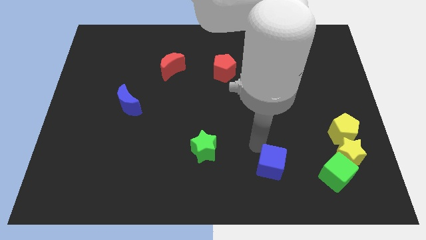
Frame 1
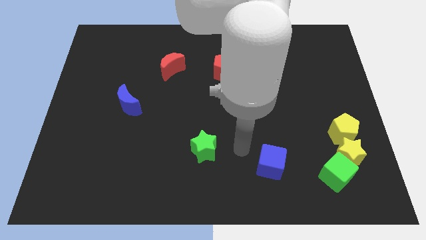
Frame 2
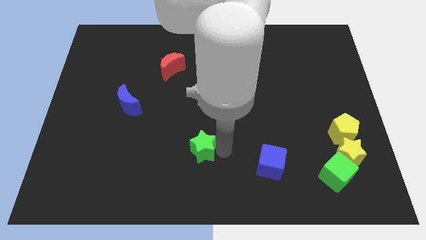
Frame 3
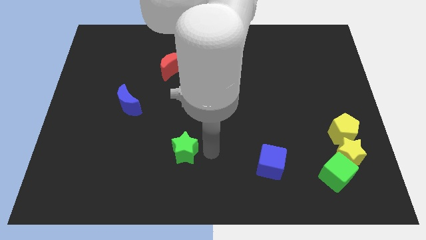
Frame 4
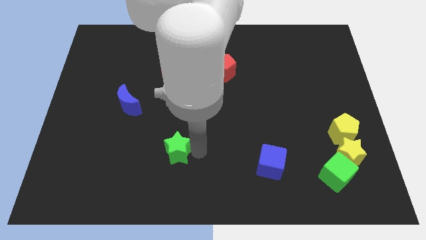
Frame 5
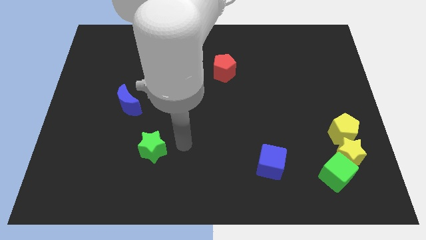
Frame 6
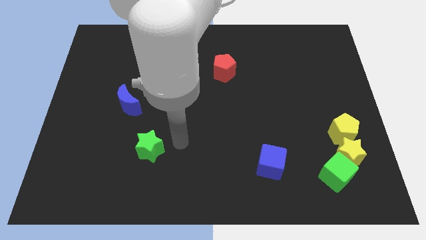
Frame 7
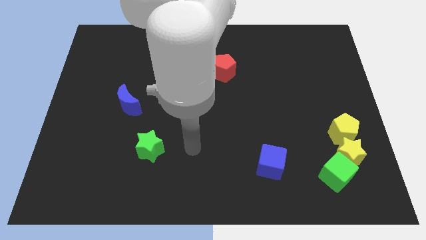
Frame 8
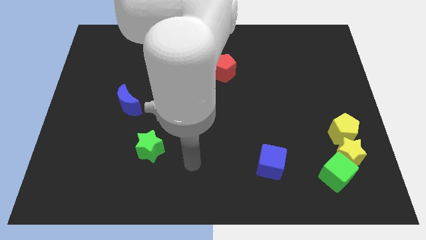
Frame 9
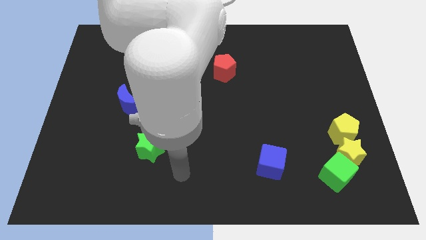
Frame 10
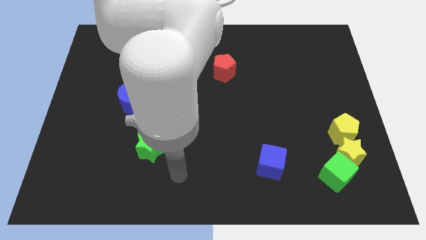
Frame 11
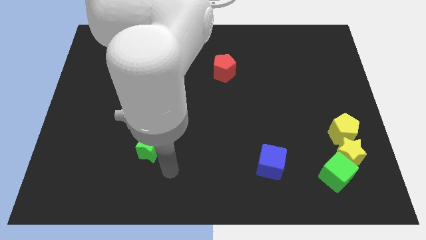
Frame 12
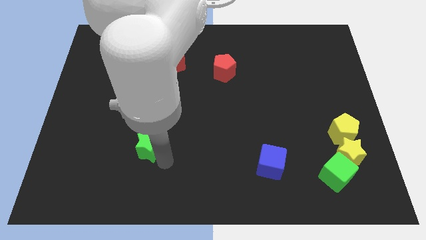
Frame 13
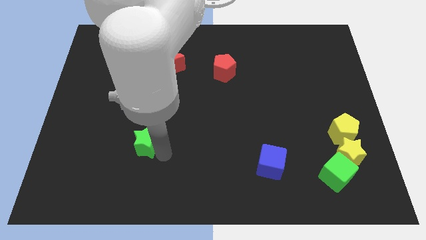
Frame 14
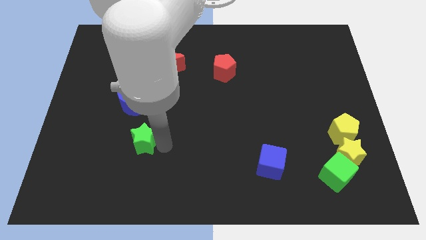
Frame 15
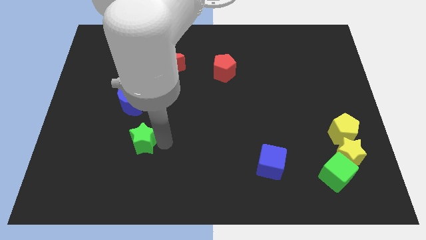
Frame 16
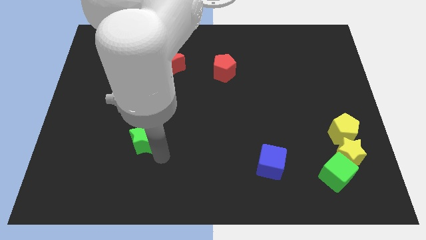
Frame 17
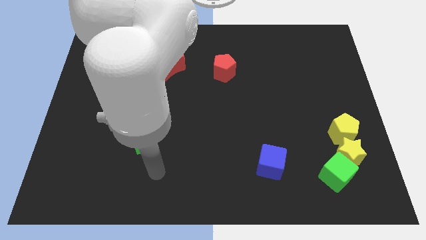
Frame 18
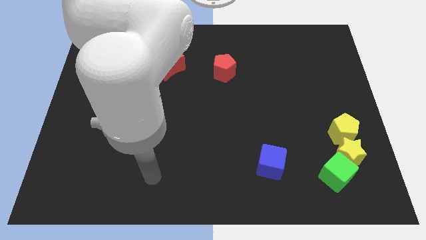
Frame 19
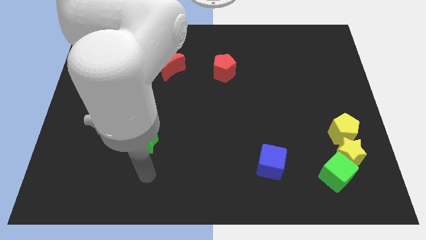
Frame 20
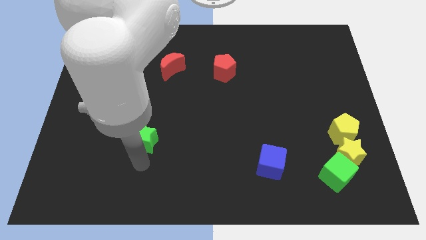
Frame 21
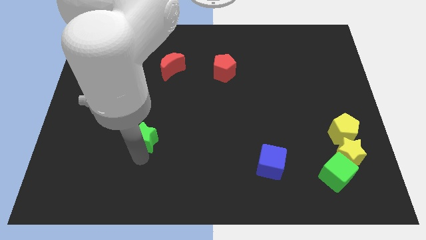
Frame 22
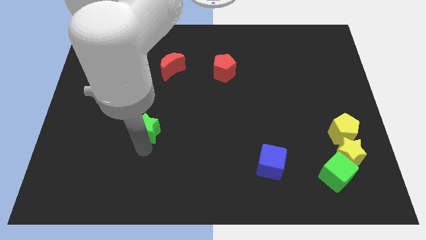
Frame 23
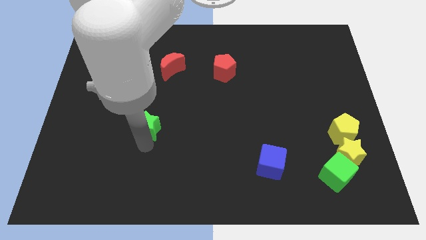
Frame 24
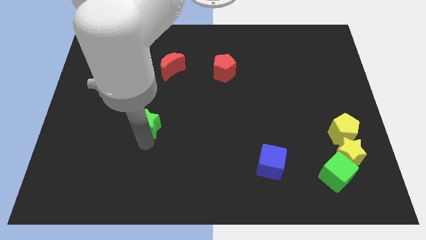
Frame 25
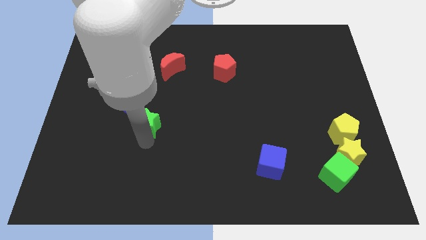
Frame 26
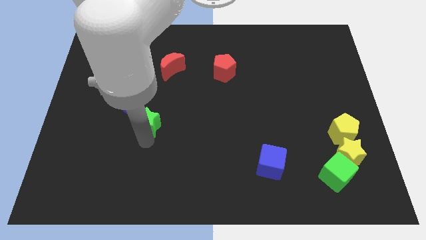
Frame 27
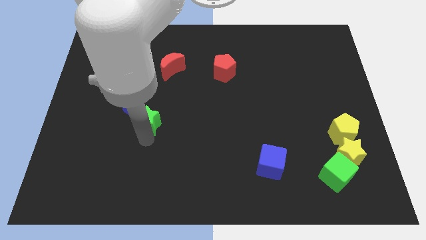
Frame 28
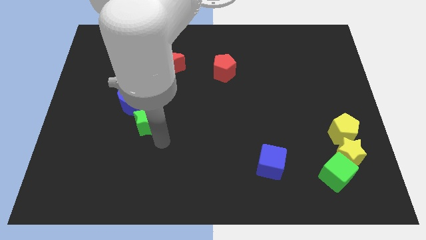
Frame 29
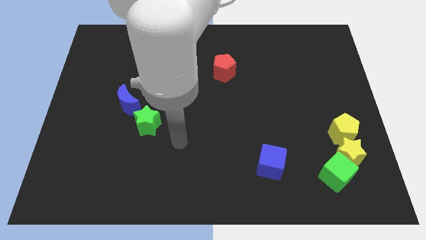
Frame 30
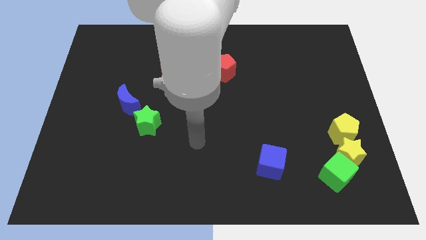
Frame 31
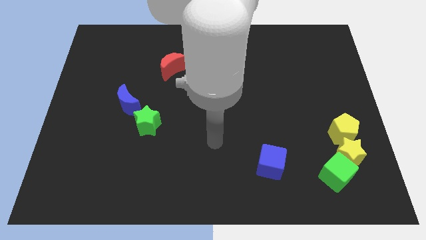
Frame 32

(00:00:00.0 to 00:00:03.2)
place the green star close to blue crescent

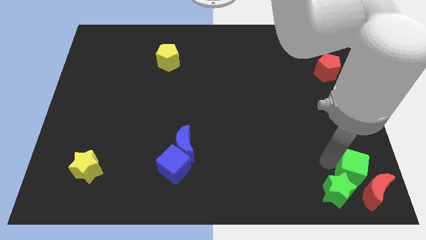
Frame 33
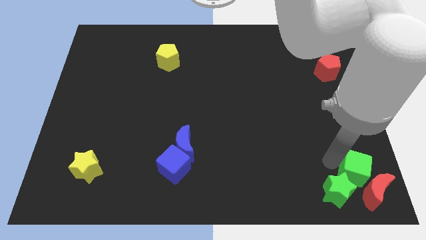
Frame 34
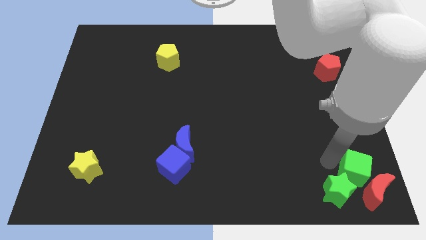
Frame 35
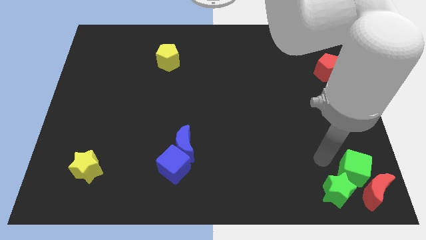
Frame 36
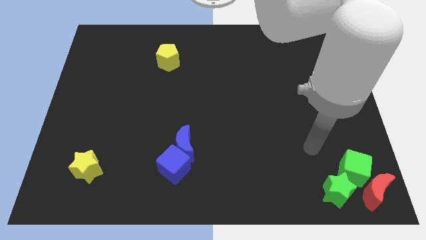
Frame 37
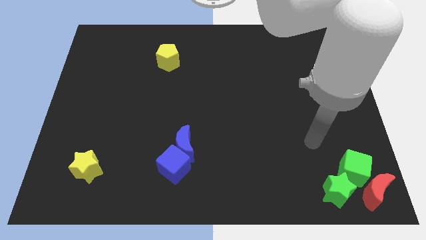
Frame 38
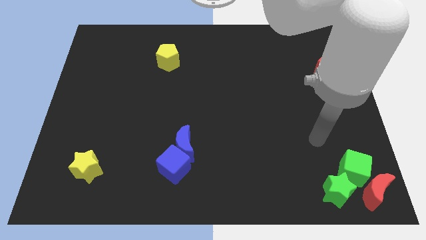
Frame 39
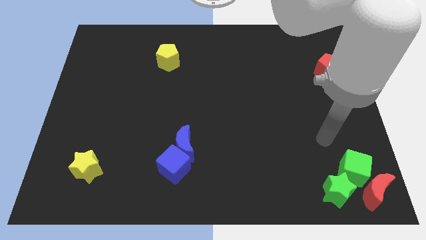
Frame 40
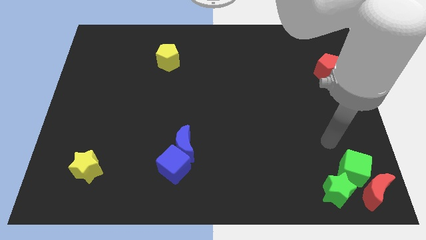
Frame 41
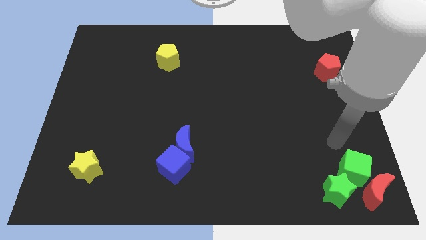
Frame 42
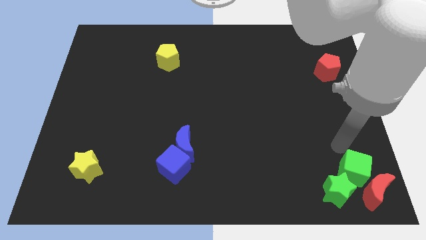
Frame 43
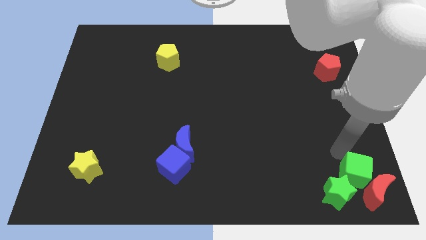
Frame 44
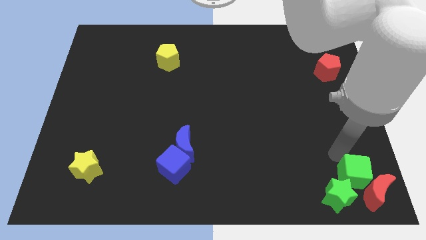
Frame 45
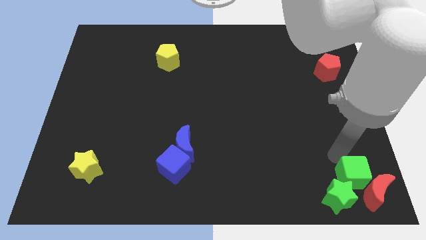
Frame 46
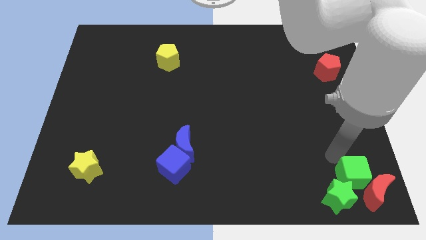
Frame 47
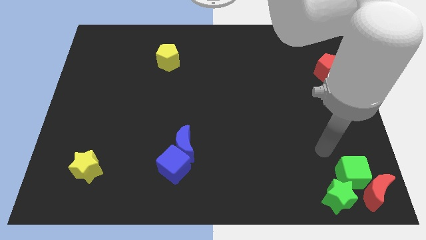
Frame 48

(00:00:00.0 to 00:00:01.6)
move the green cube into the green star and red moon

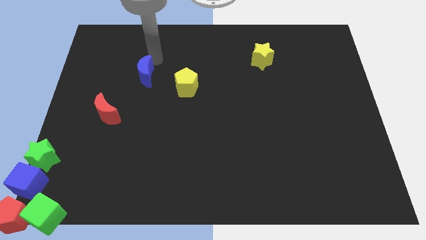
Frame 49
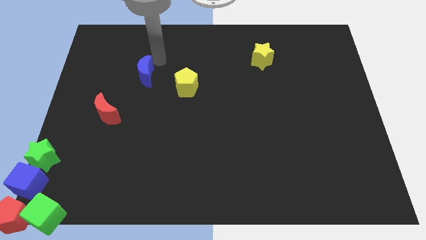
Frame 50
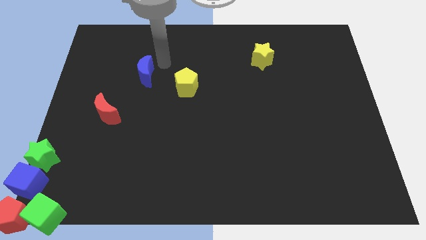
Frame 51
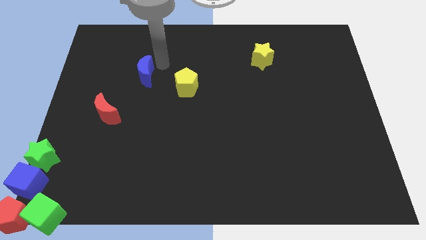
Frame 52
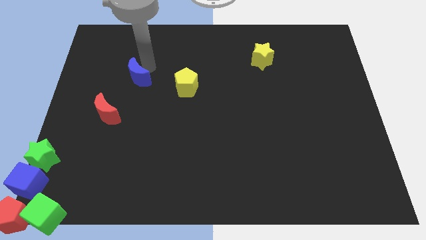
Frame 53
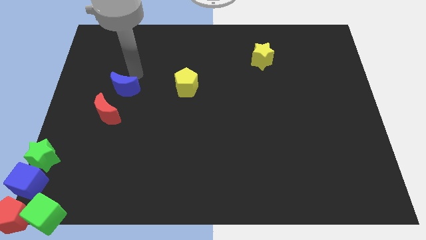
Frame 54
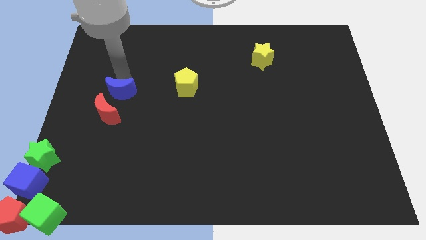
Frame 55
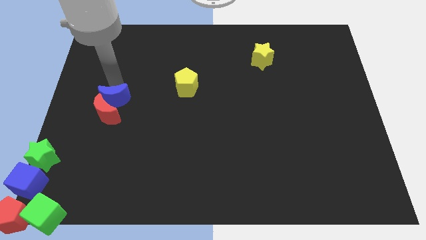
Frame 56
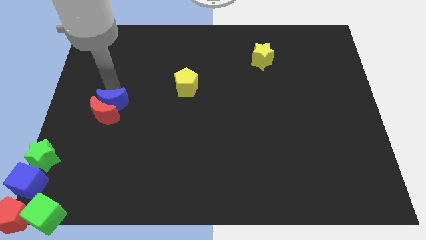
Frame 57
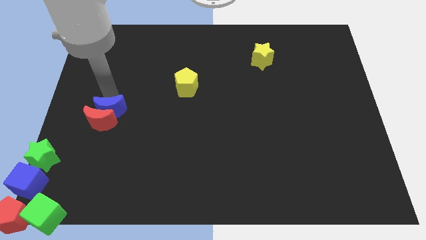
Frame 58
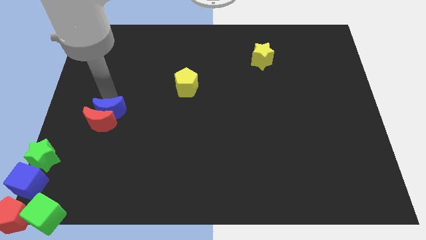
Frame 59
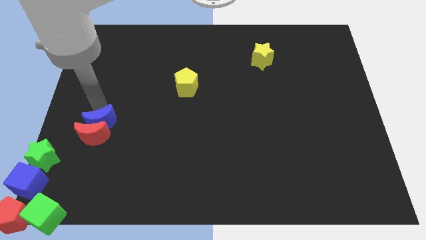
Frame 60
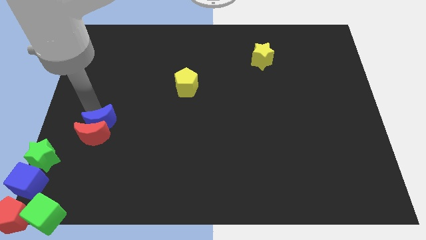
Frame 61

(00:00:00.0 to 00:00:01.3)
push the blue moon into the top side of the red moon

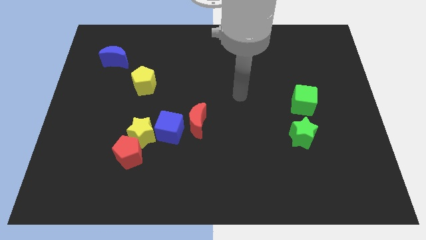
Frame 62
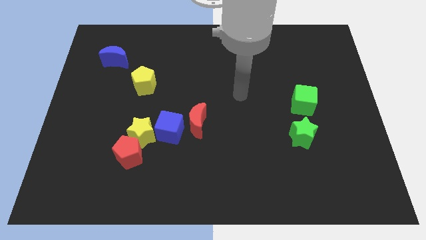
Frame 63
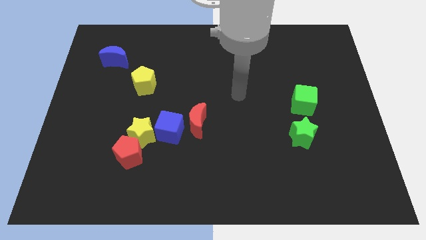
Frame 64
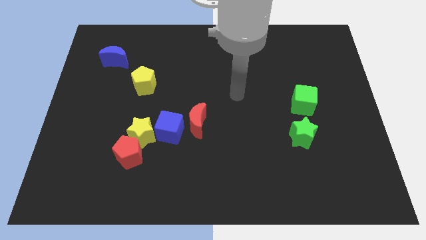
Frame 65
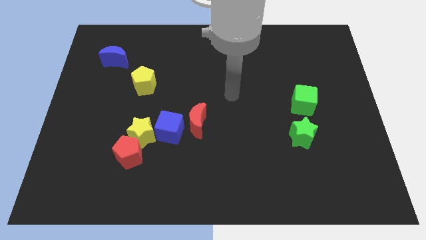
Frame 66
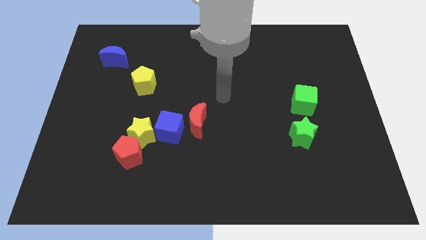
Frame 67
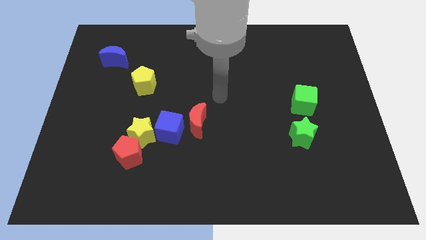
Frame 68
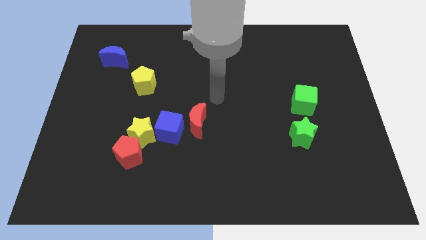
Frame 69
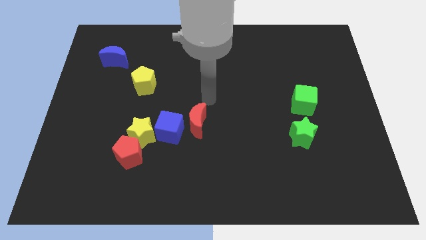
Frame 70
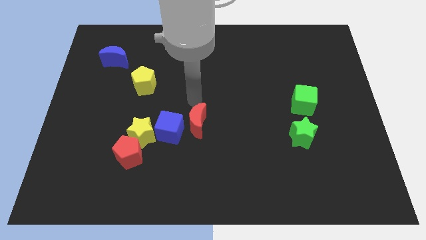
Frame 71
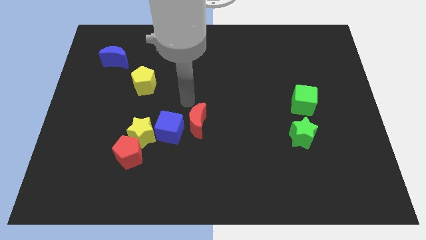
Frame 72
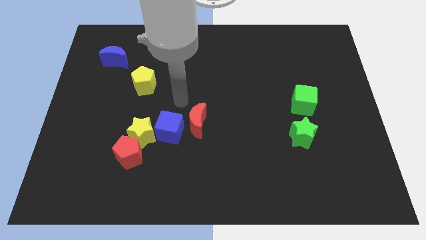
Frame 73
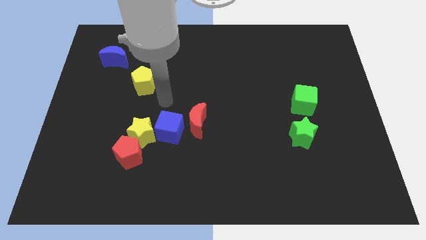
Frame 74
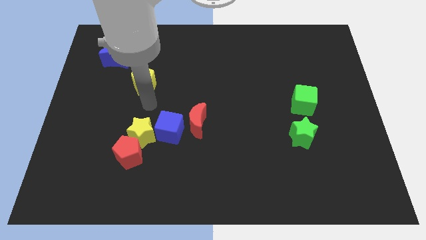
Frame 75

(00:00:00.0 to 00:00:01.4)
put your hand vertically below the yellow pentagon

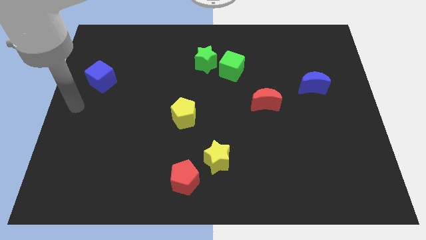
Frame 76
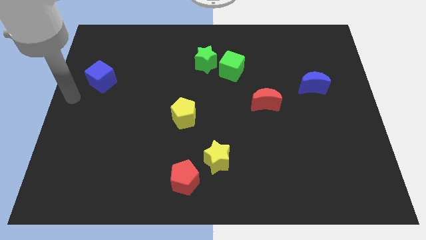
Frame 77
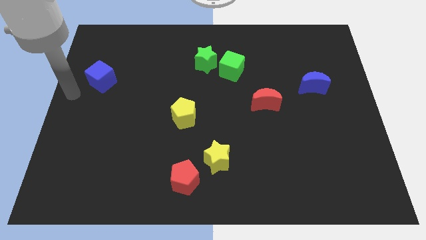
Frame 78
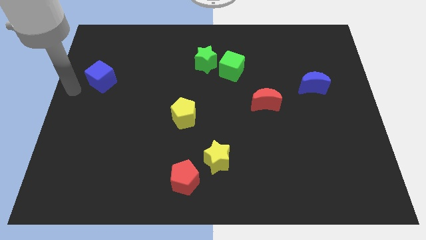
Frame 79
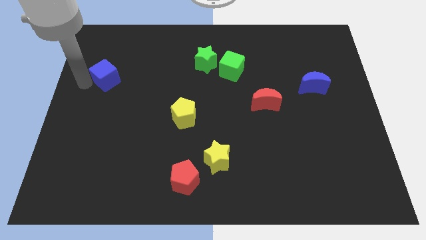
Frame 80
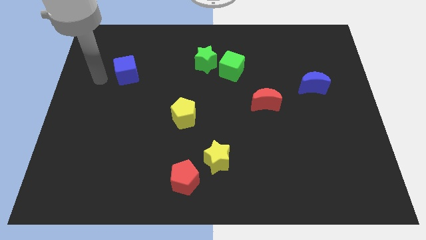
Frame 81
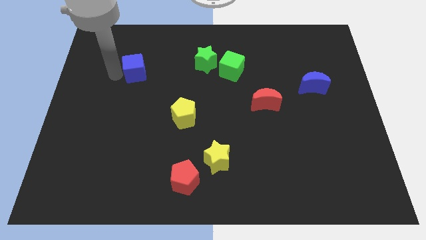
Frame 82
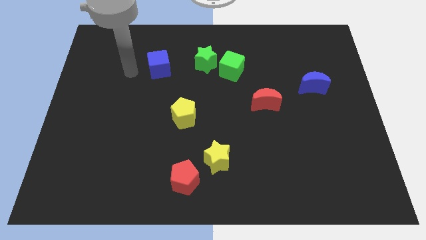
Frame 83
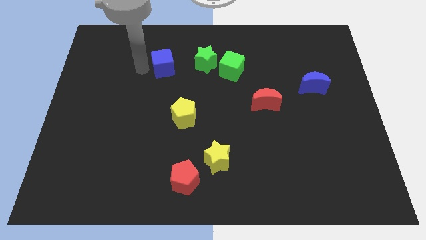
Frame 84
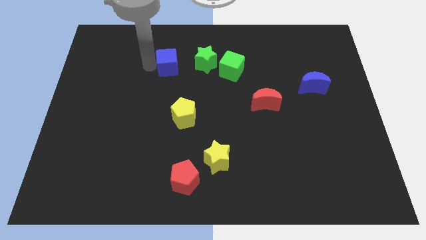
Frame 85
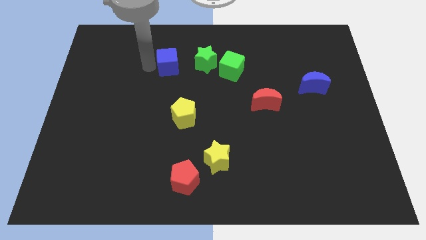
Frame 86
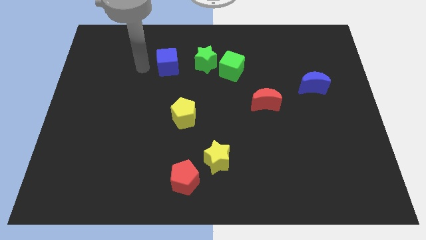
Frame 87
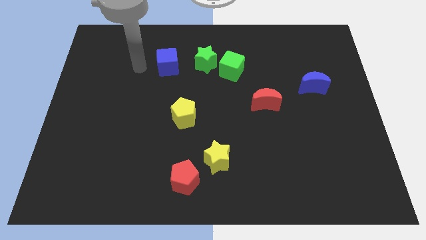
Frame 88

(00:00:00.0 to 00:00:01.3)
push blue cube towards green star
